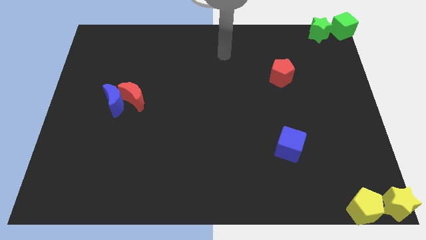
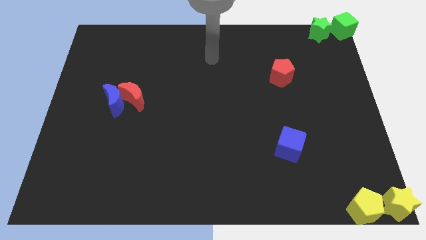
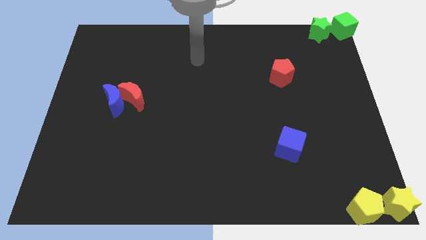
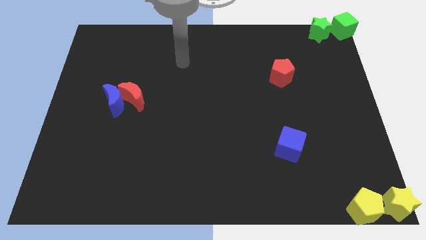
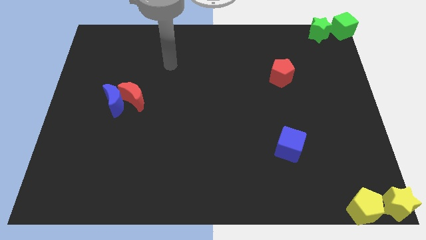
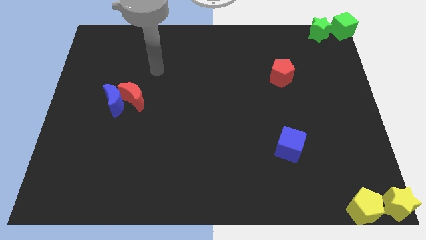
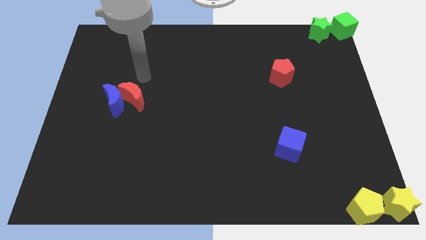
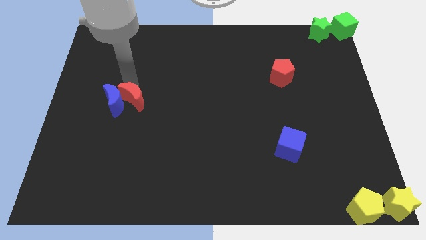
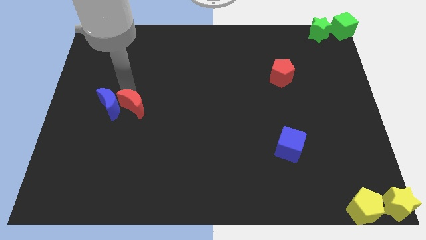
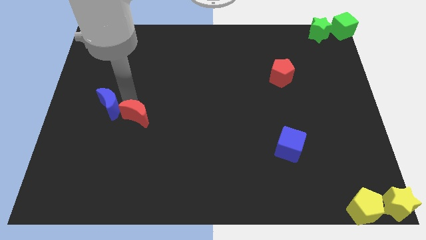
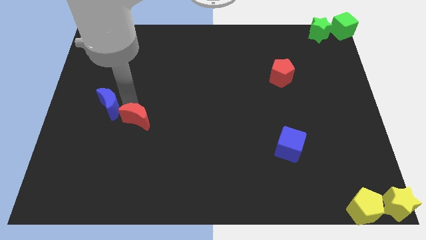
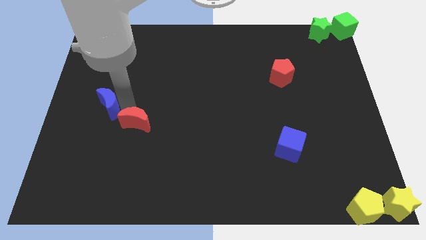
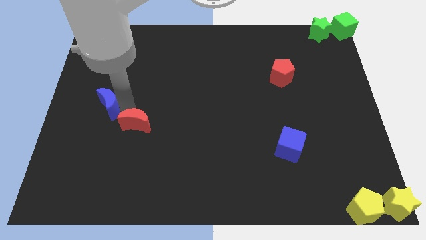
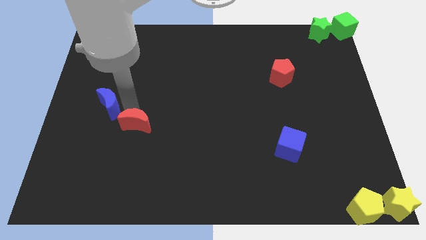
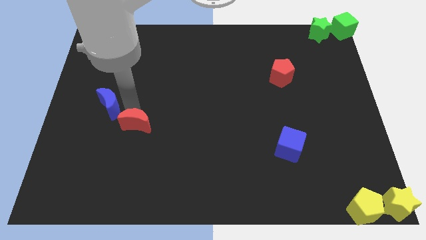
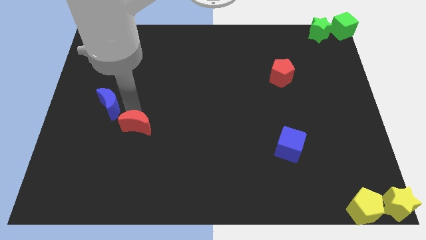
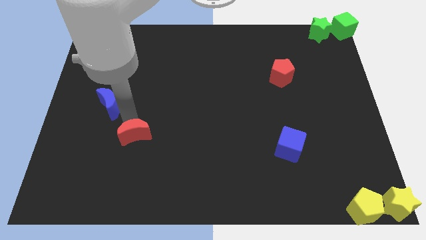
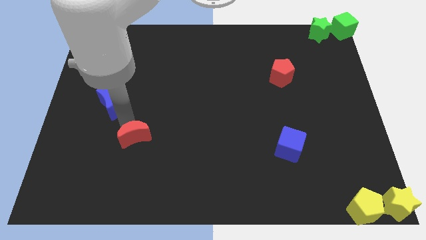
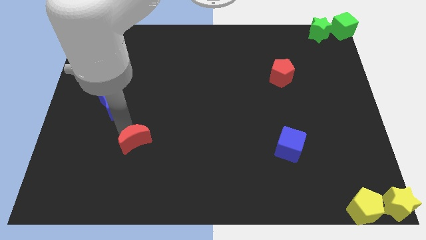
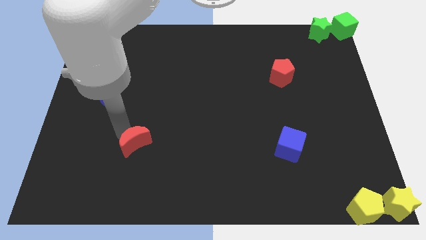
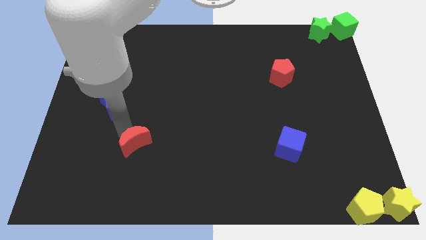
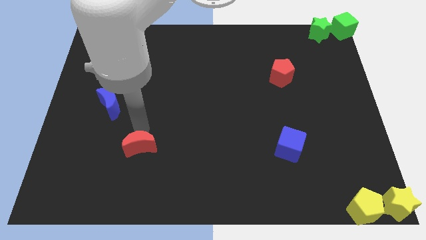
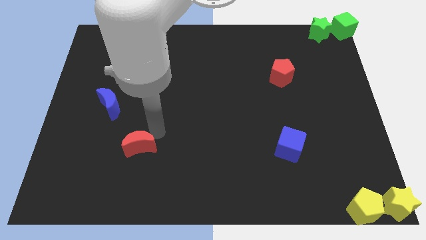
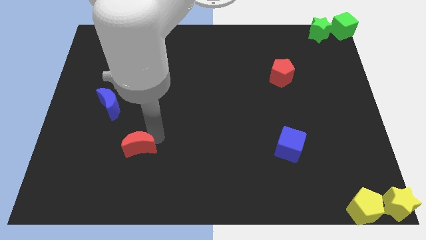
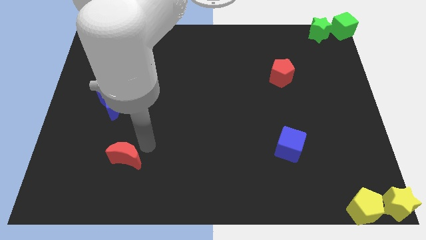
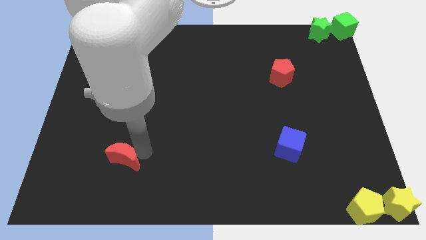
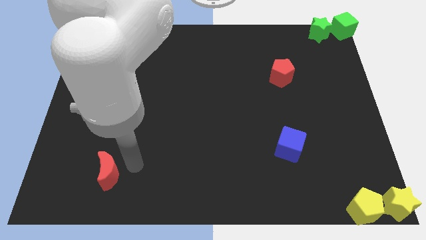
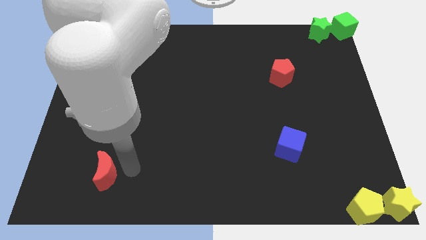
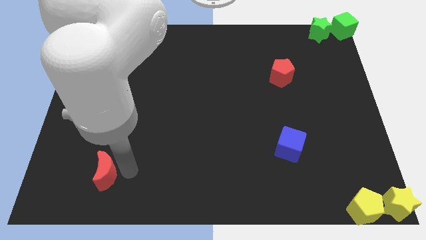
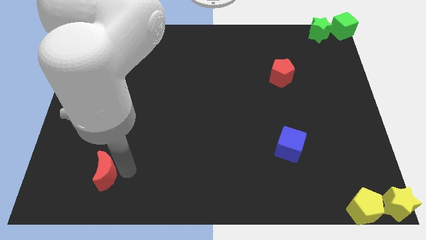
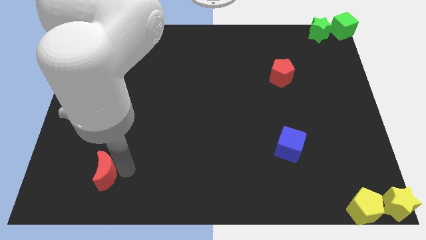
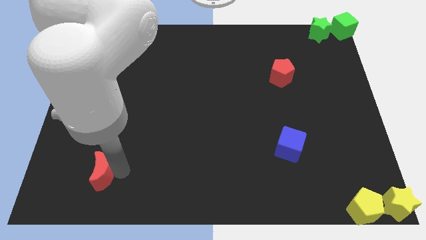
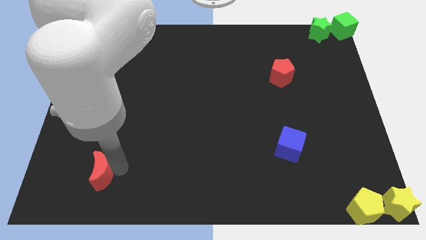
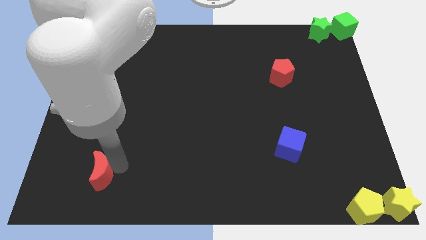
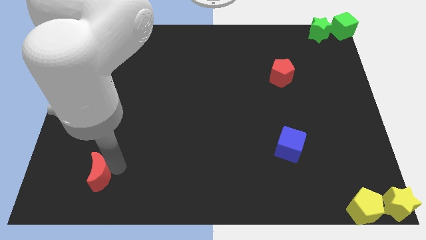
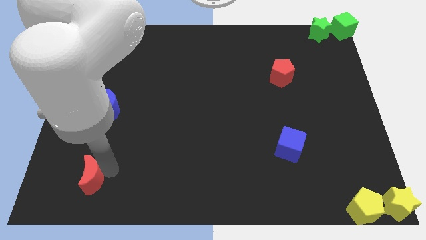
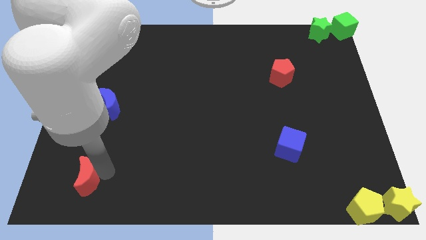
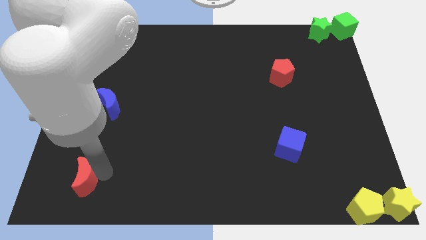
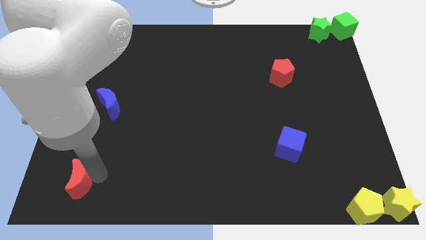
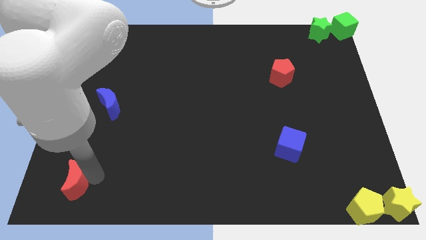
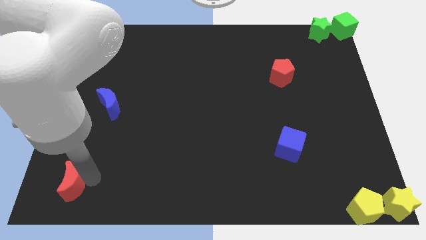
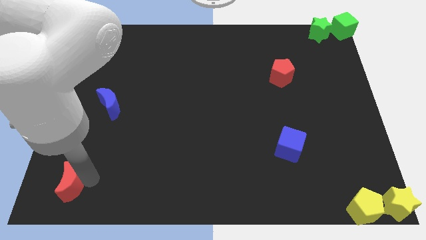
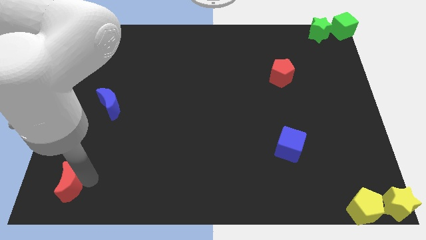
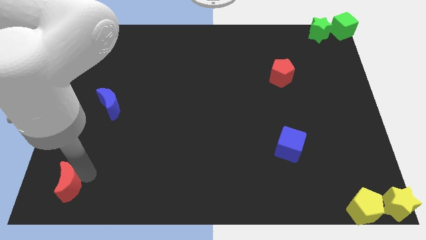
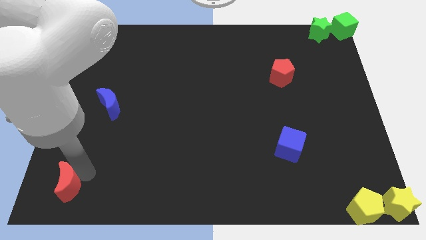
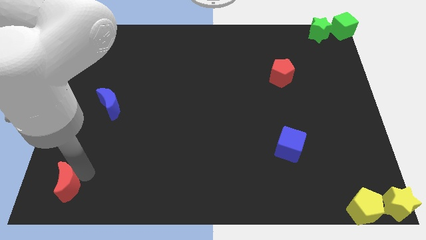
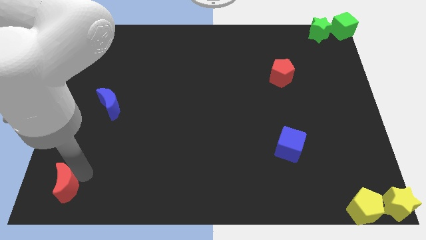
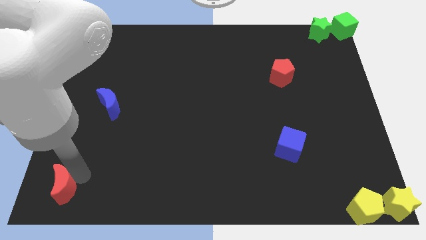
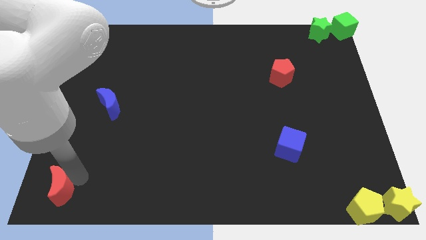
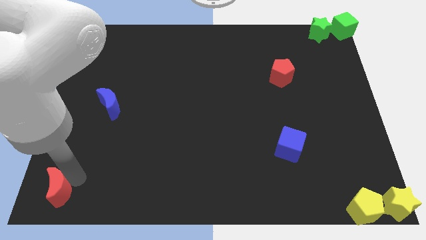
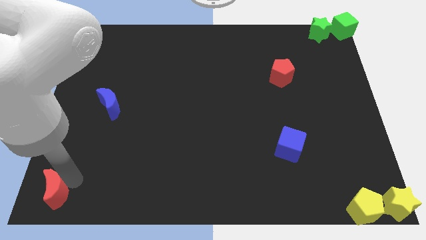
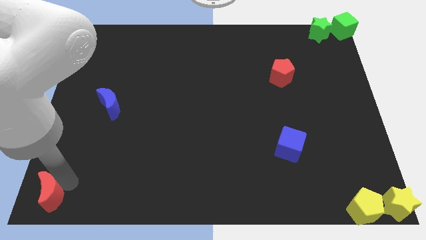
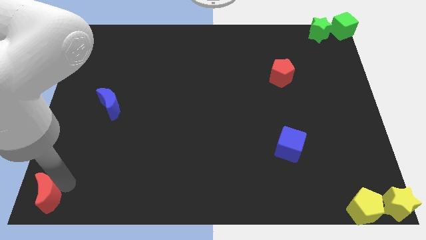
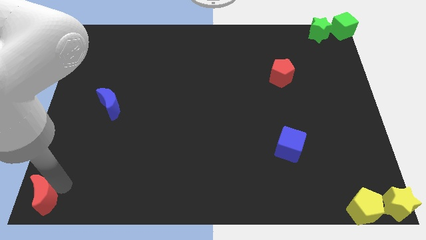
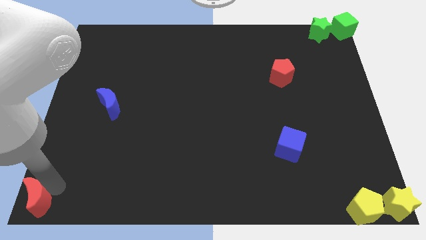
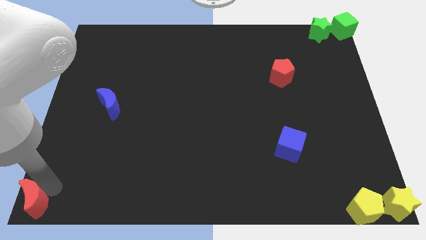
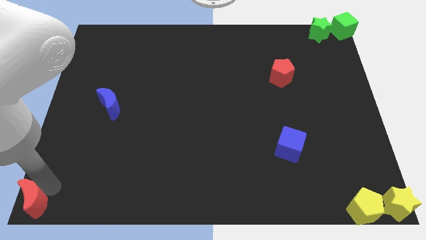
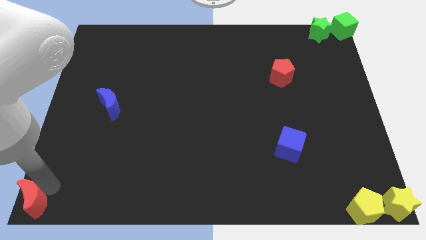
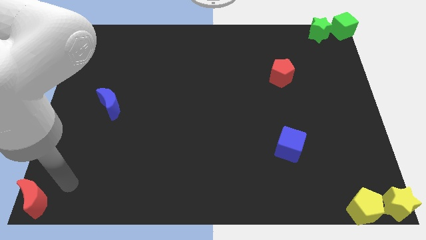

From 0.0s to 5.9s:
move the red crescent to the bottom left of the board

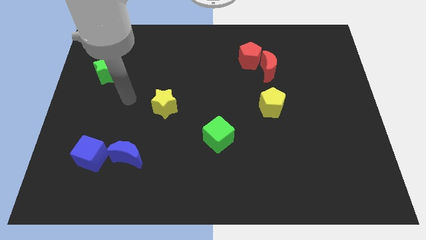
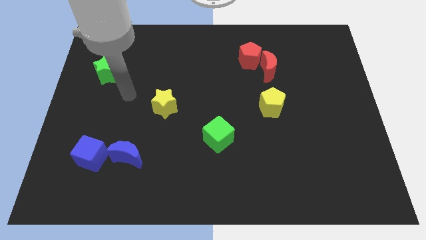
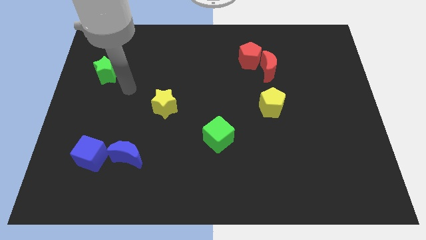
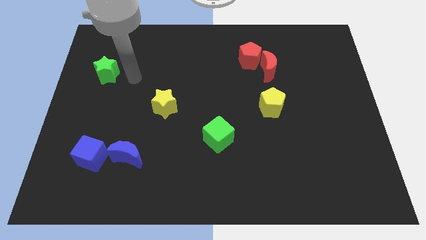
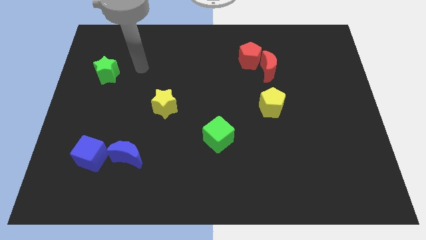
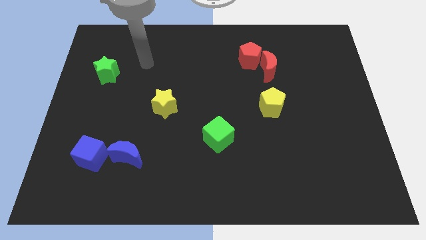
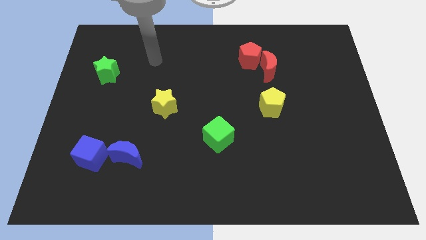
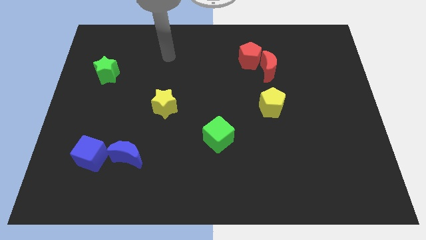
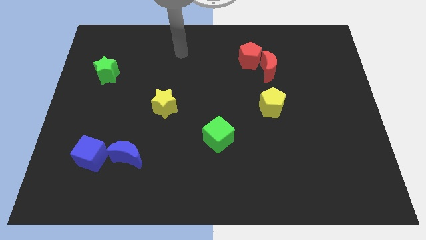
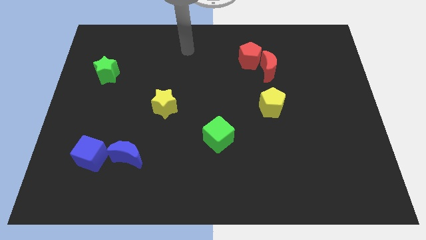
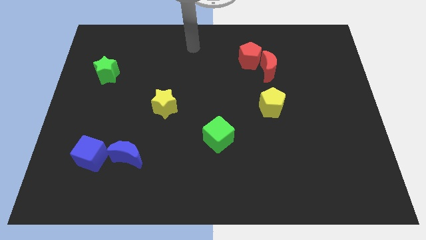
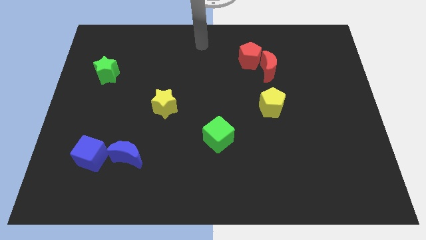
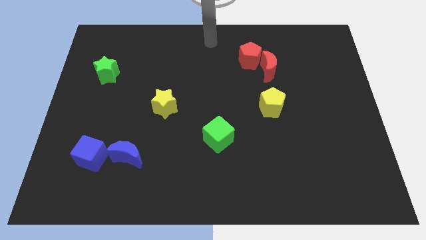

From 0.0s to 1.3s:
move your hand to the top center of the board

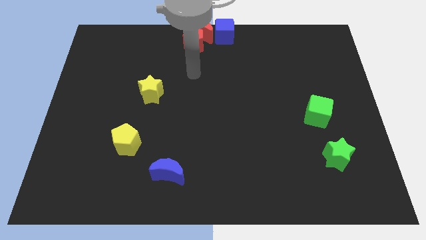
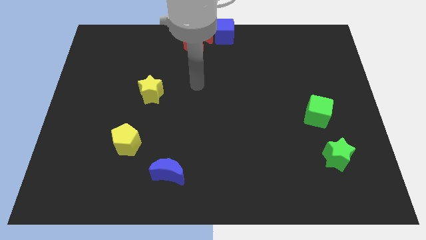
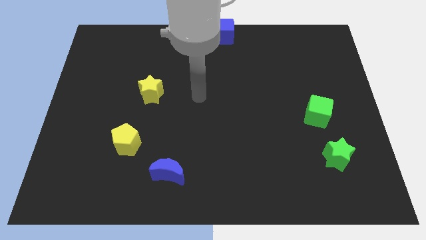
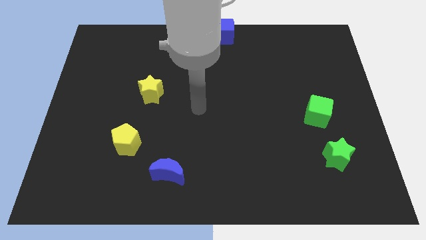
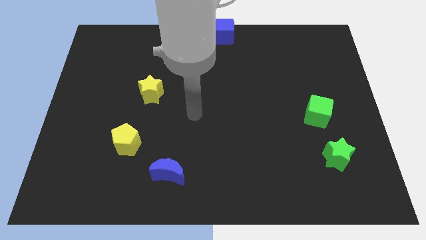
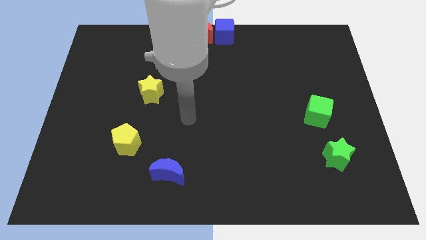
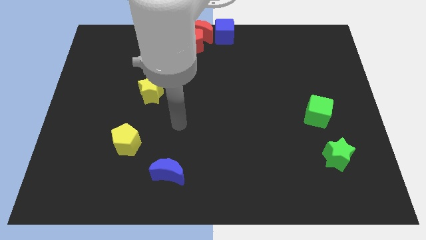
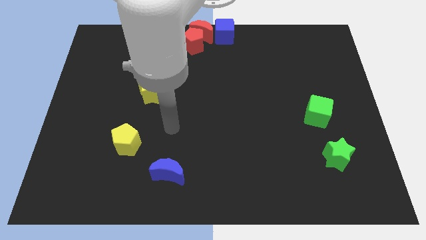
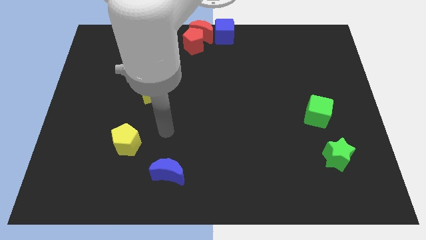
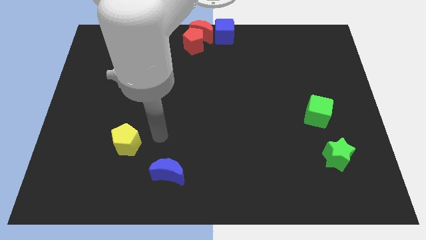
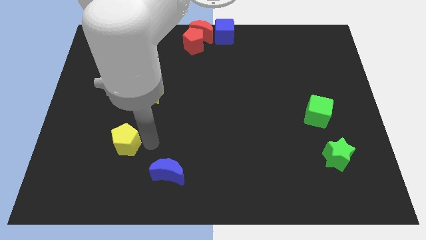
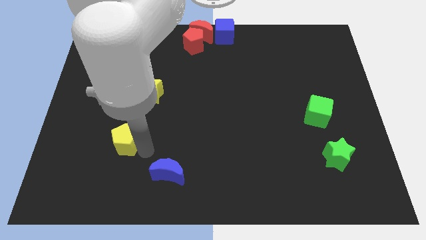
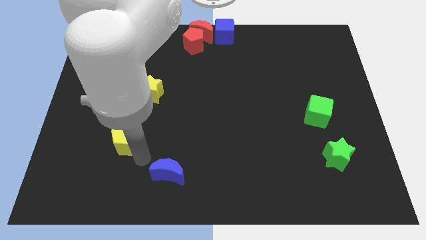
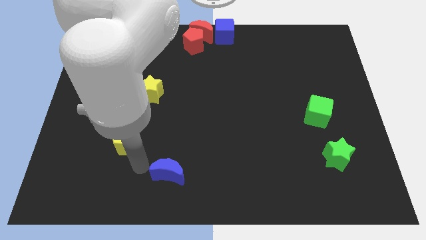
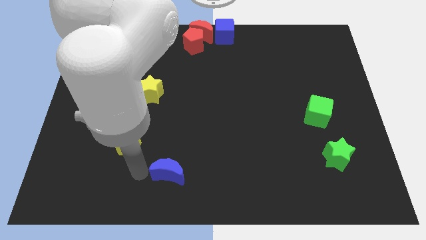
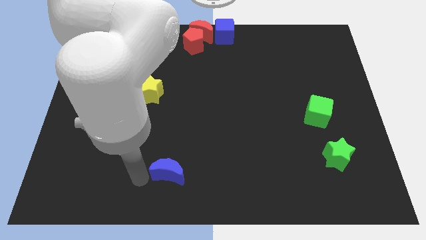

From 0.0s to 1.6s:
move arm to the left of blue crescent
